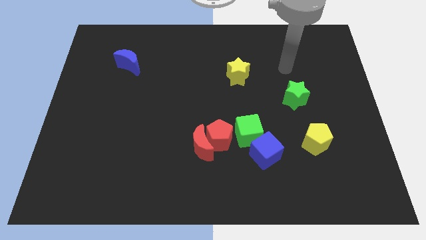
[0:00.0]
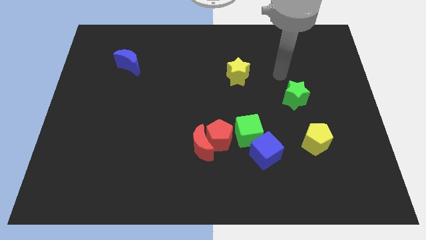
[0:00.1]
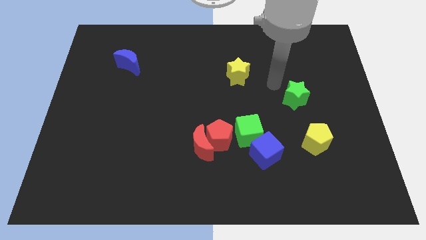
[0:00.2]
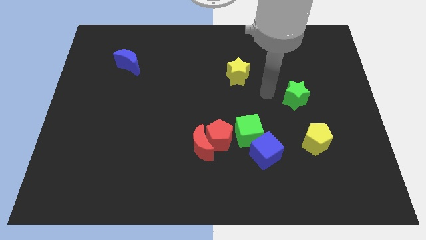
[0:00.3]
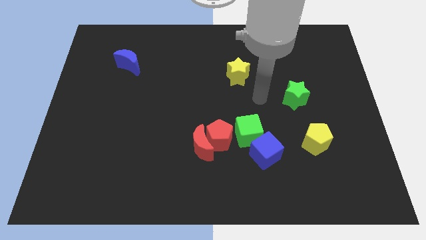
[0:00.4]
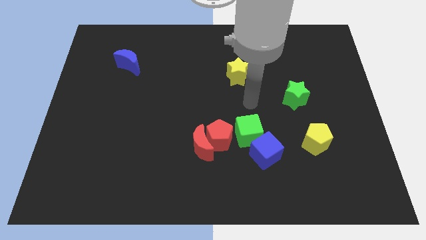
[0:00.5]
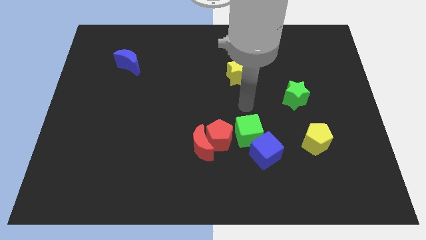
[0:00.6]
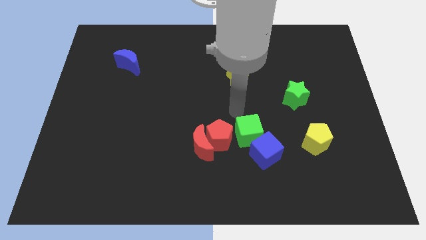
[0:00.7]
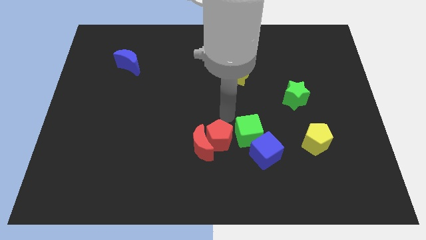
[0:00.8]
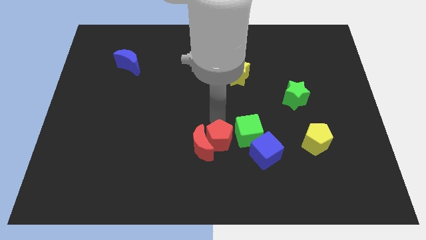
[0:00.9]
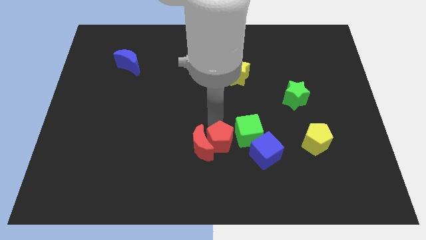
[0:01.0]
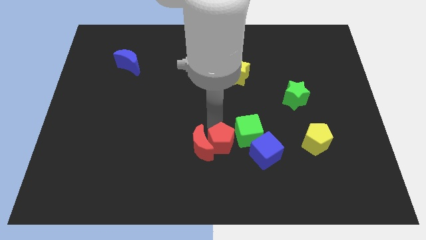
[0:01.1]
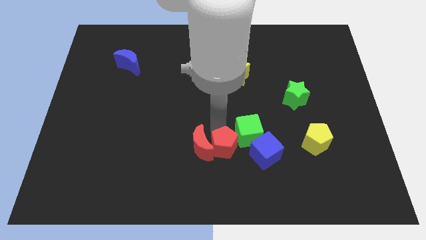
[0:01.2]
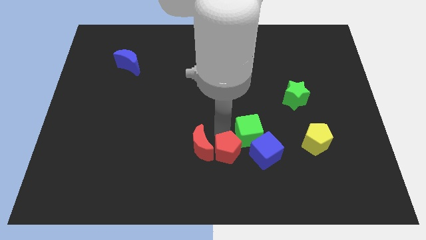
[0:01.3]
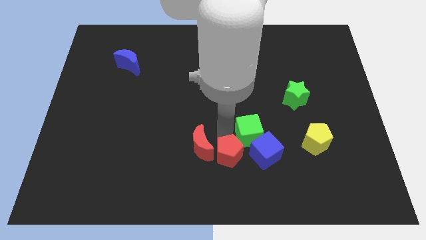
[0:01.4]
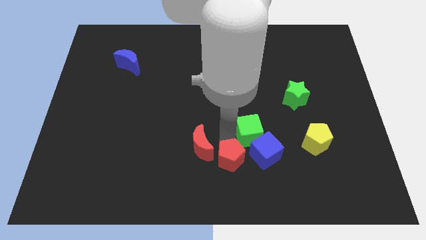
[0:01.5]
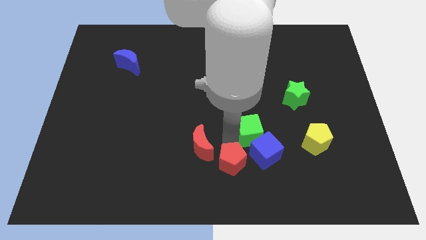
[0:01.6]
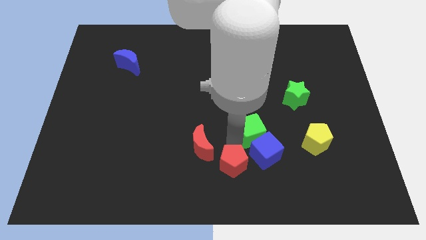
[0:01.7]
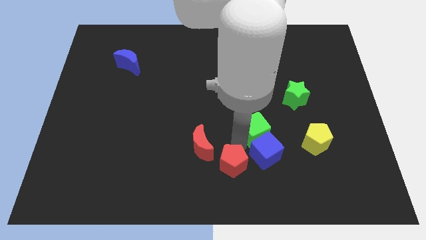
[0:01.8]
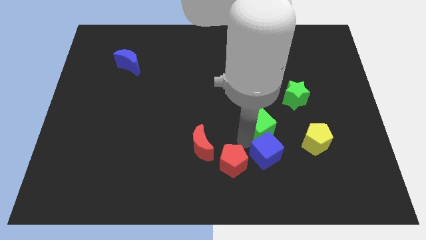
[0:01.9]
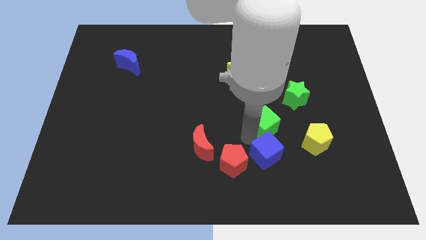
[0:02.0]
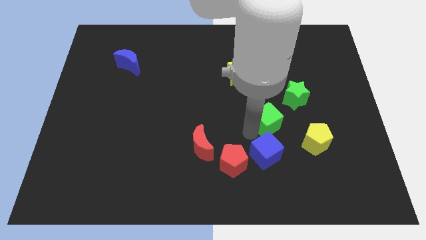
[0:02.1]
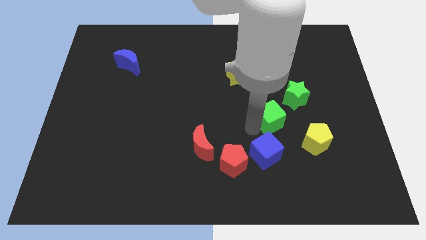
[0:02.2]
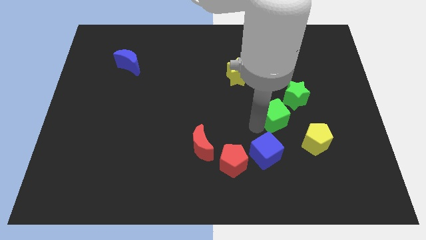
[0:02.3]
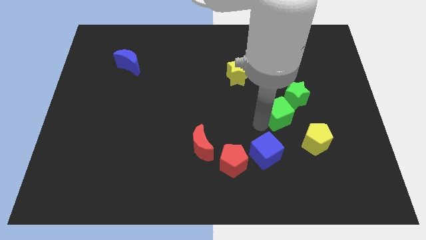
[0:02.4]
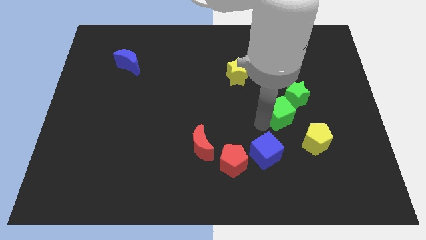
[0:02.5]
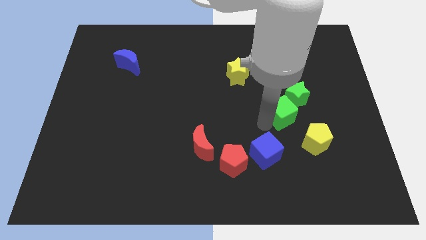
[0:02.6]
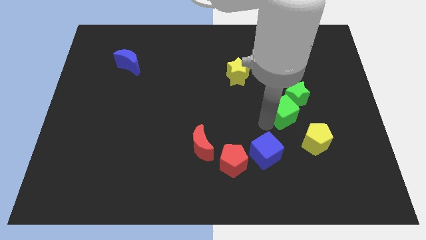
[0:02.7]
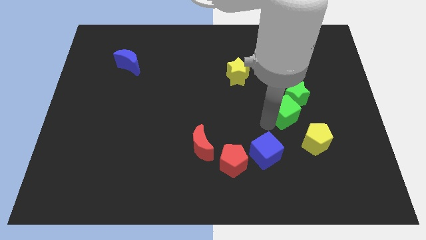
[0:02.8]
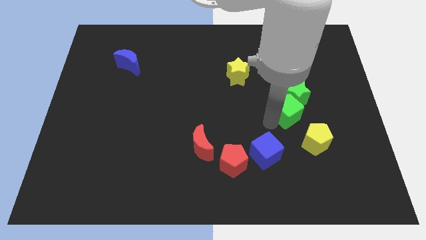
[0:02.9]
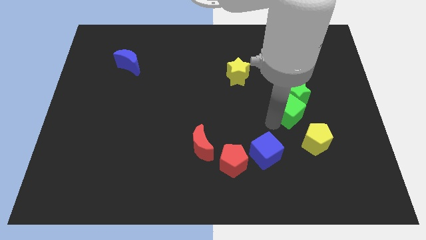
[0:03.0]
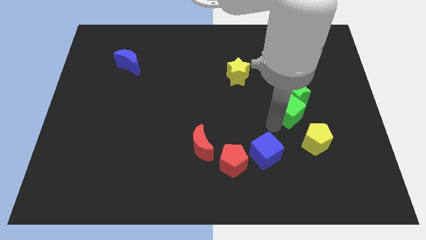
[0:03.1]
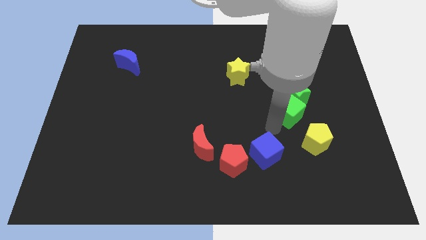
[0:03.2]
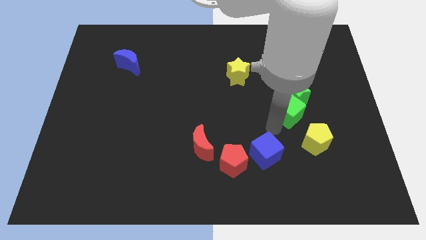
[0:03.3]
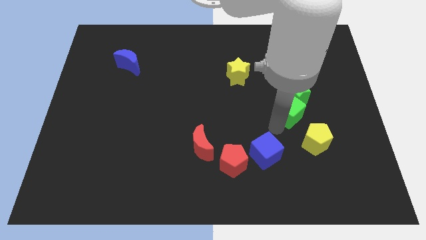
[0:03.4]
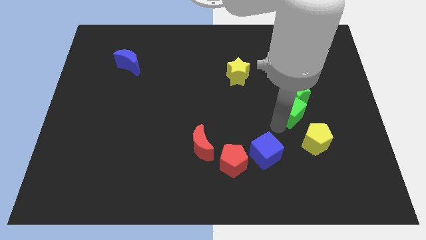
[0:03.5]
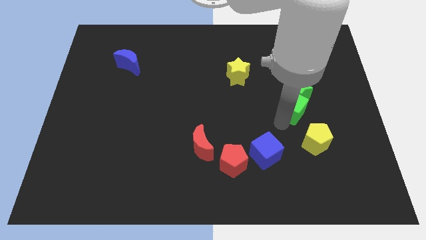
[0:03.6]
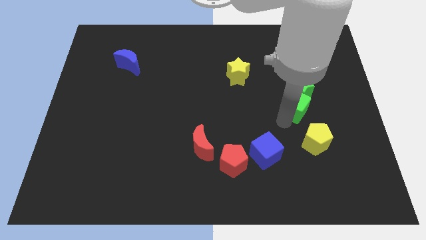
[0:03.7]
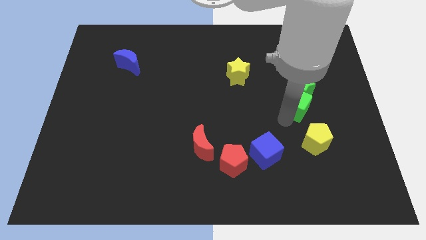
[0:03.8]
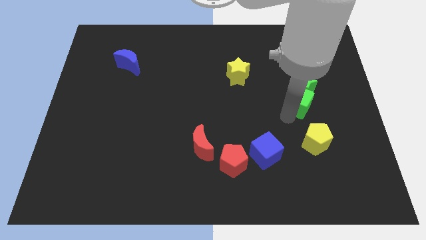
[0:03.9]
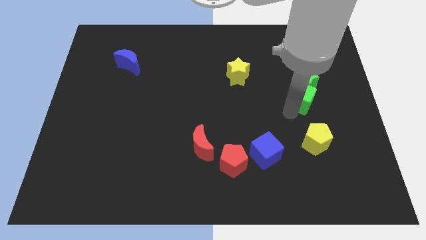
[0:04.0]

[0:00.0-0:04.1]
push green cube into green star

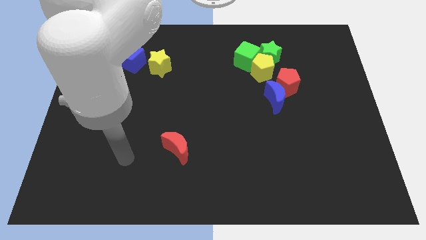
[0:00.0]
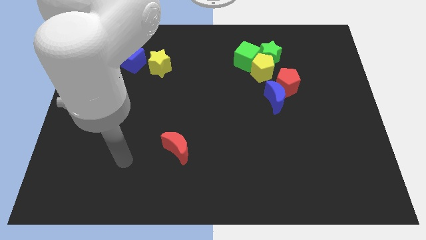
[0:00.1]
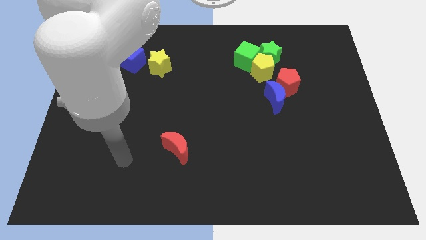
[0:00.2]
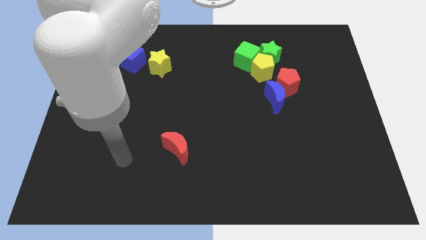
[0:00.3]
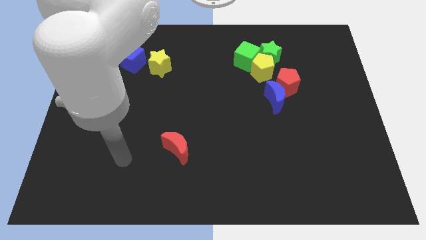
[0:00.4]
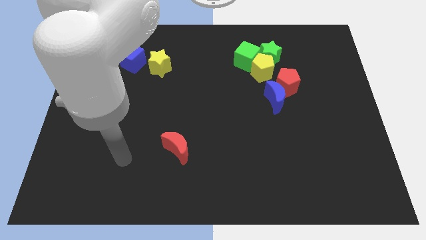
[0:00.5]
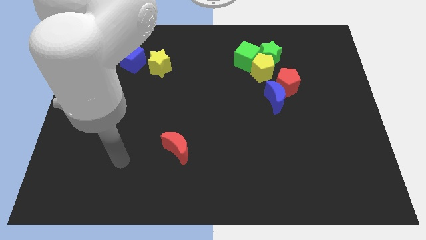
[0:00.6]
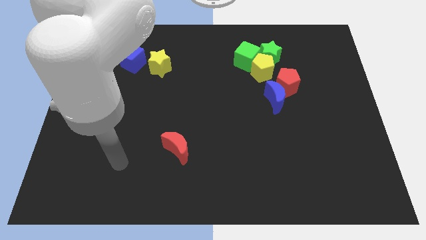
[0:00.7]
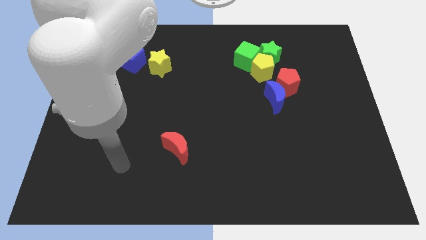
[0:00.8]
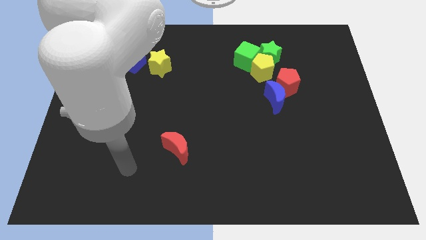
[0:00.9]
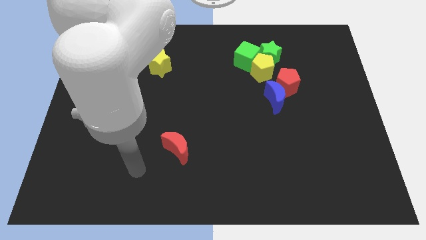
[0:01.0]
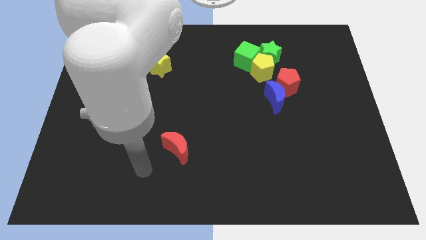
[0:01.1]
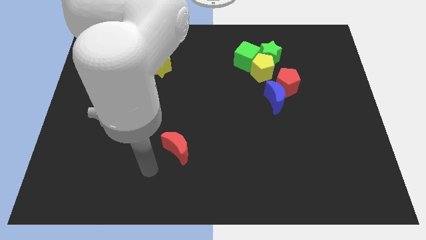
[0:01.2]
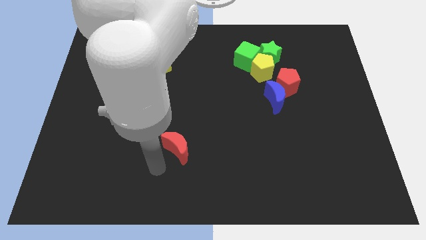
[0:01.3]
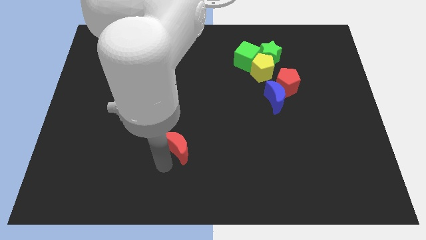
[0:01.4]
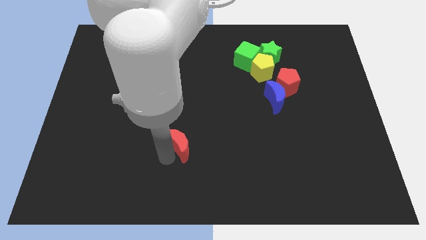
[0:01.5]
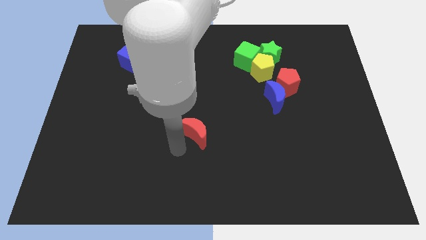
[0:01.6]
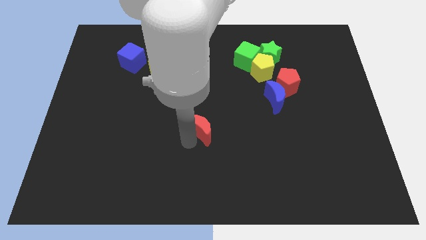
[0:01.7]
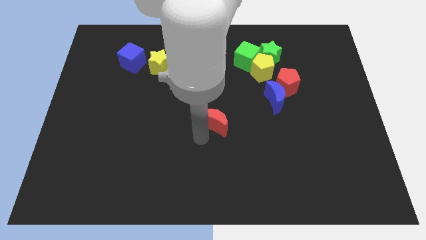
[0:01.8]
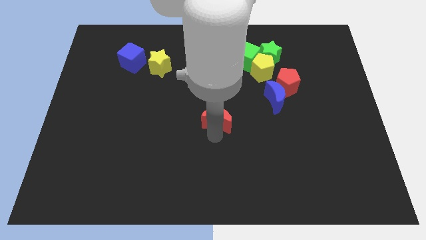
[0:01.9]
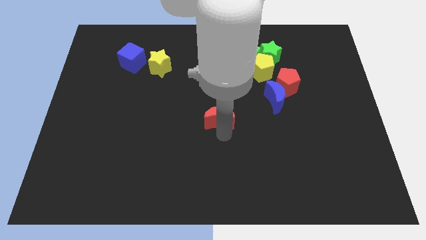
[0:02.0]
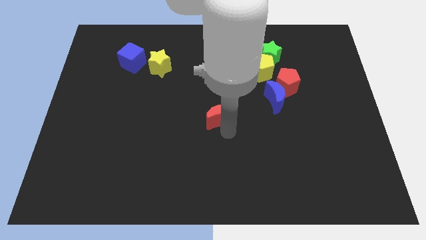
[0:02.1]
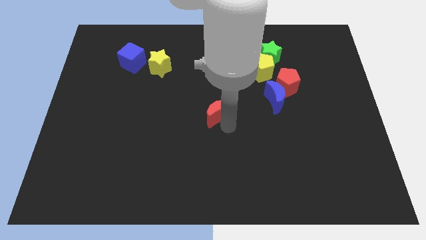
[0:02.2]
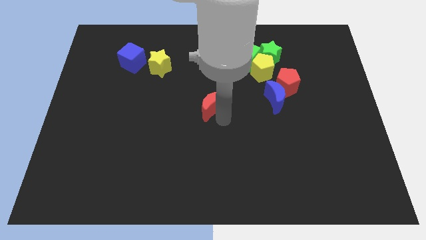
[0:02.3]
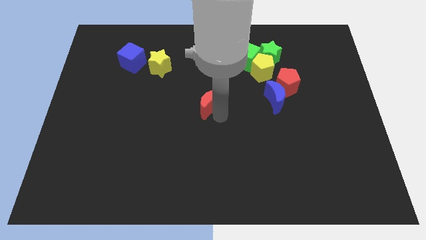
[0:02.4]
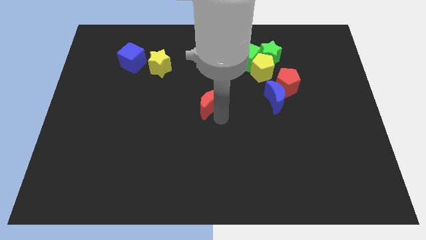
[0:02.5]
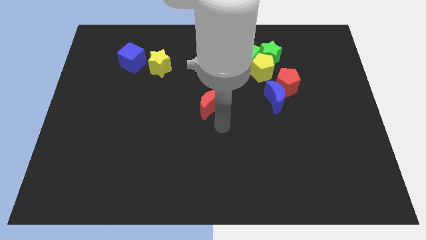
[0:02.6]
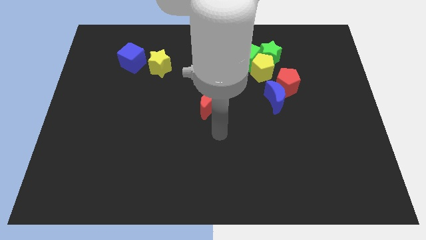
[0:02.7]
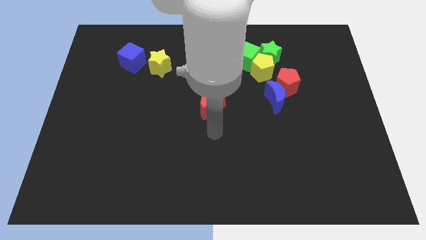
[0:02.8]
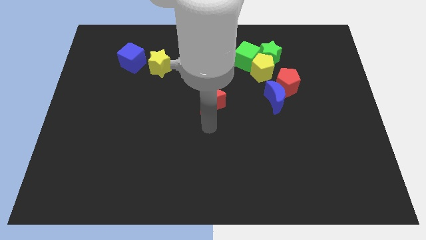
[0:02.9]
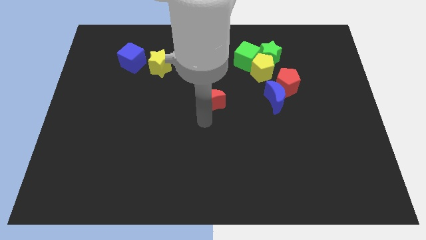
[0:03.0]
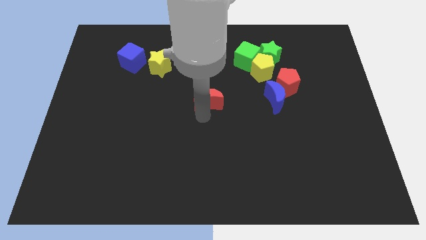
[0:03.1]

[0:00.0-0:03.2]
place the red crescent to the left of the blue crescent

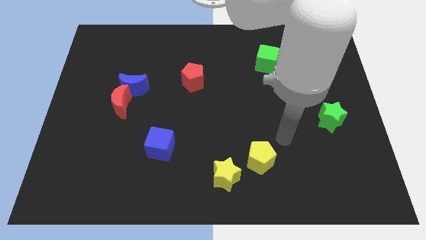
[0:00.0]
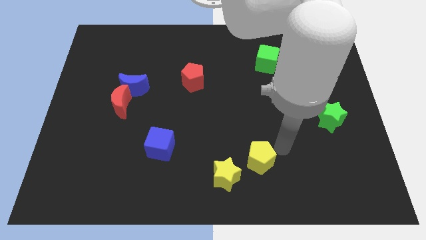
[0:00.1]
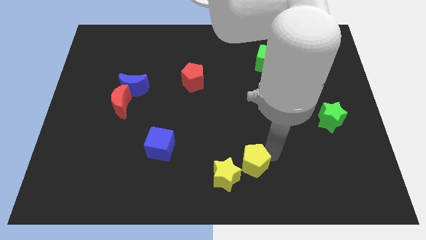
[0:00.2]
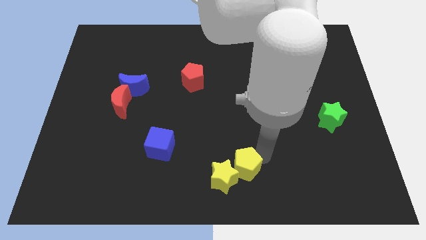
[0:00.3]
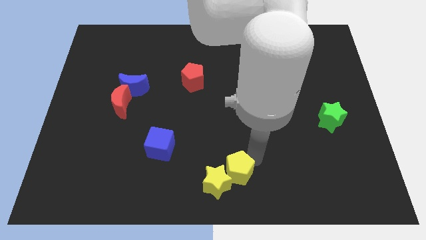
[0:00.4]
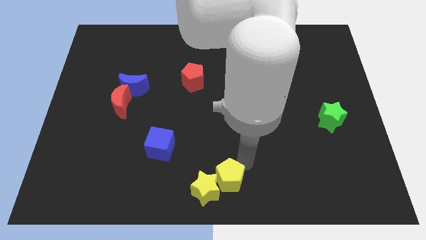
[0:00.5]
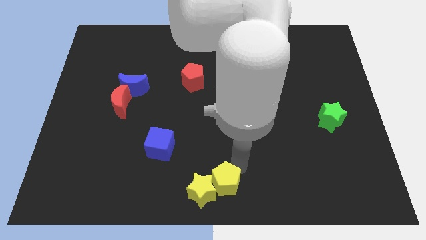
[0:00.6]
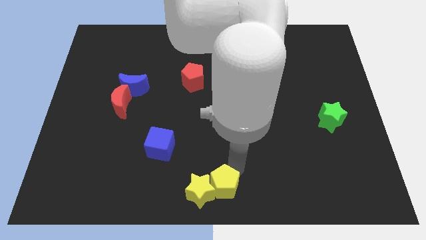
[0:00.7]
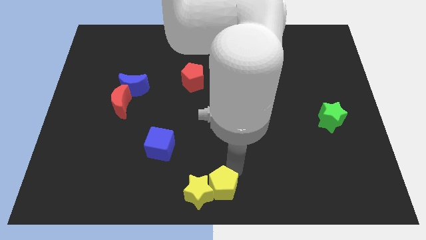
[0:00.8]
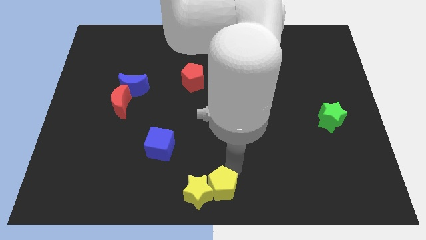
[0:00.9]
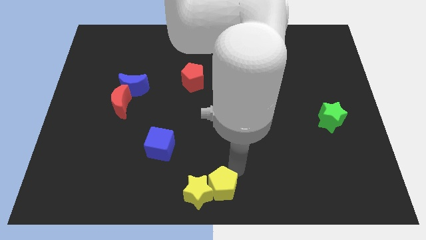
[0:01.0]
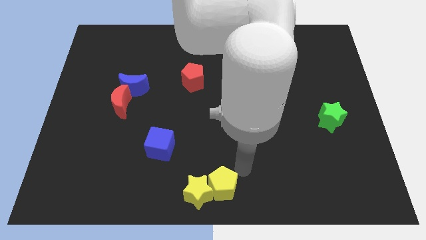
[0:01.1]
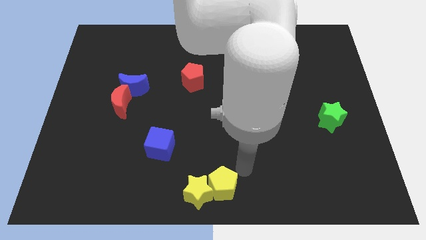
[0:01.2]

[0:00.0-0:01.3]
push the yellow pentagon into the yellow star

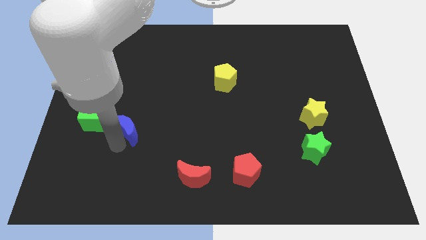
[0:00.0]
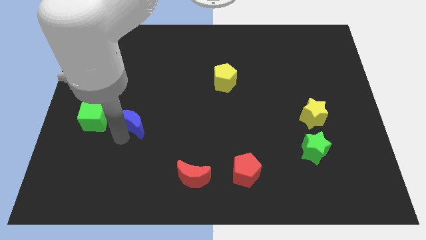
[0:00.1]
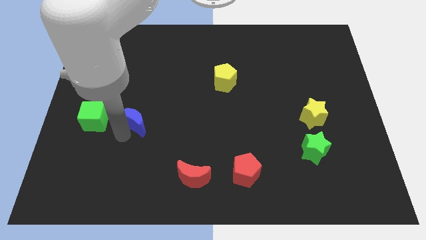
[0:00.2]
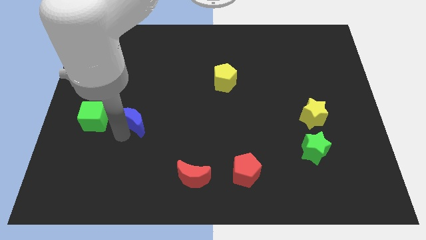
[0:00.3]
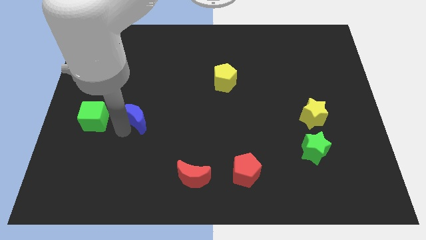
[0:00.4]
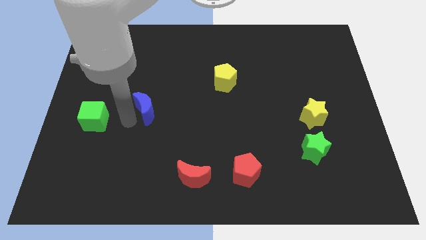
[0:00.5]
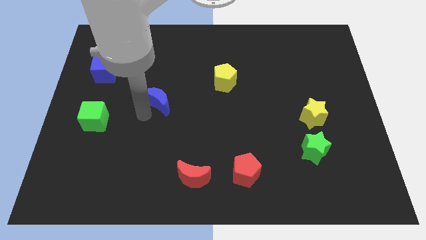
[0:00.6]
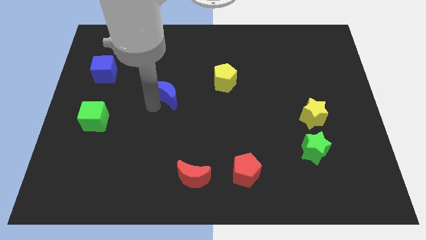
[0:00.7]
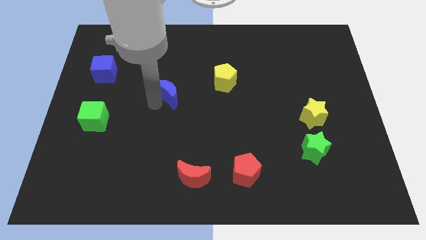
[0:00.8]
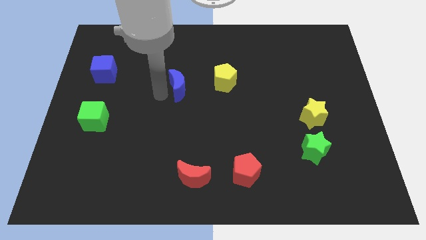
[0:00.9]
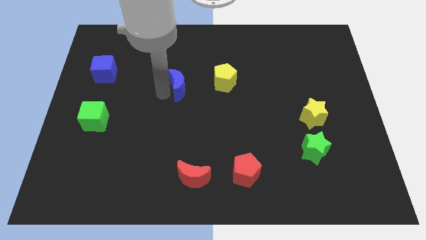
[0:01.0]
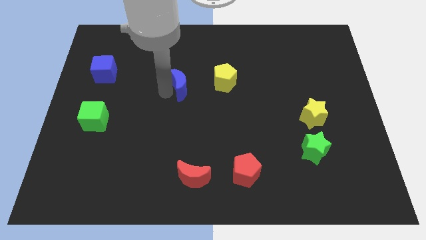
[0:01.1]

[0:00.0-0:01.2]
place blue crescent above red crescent
